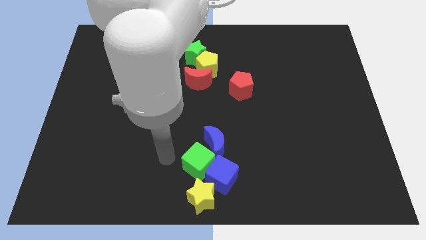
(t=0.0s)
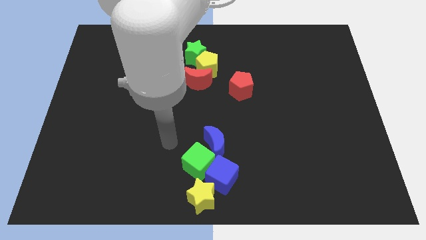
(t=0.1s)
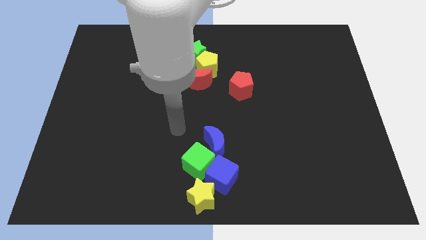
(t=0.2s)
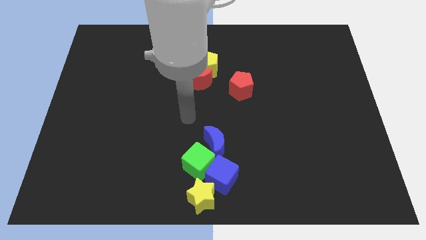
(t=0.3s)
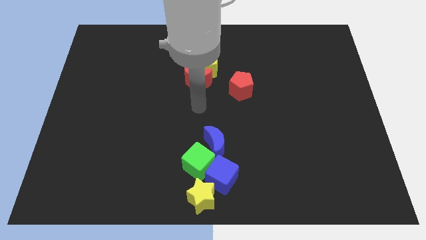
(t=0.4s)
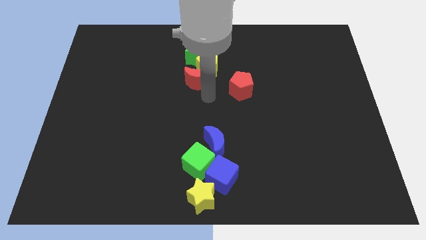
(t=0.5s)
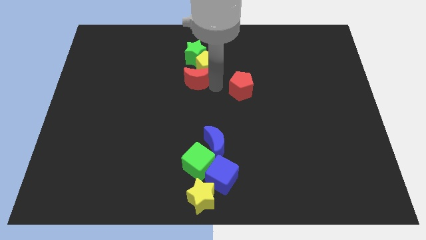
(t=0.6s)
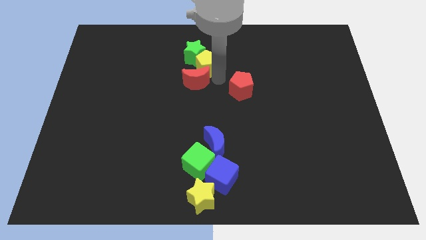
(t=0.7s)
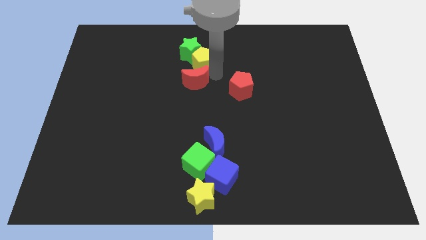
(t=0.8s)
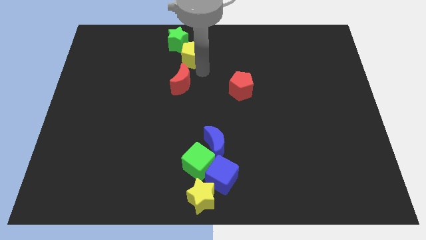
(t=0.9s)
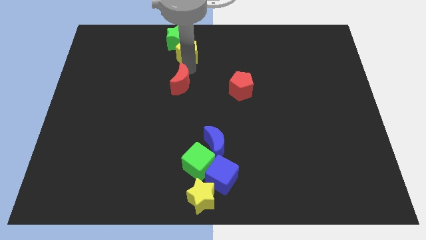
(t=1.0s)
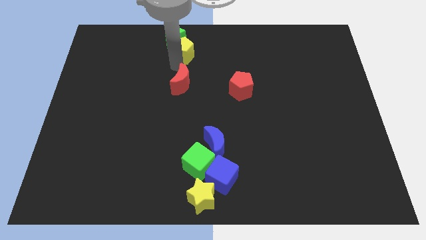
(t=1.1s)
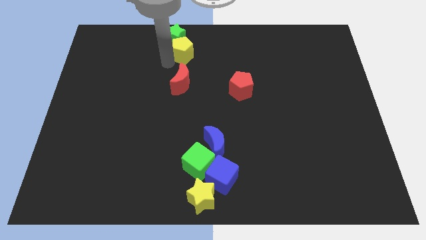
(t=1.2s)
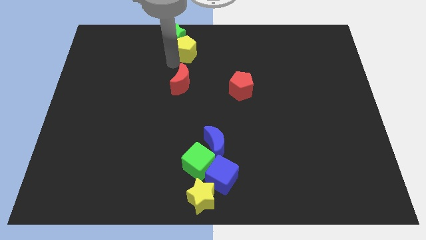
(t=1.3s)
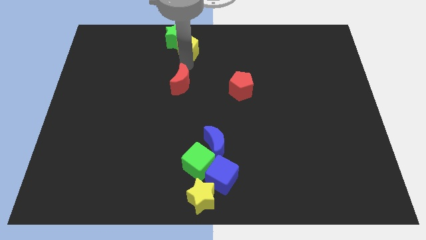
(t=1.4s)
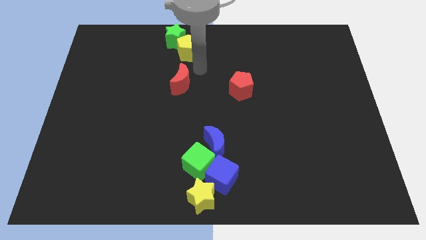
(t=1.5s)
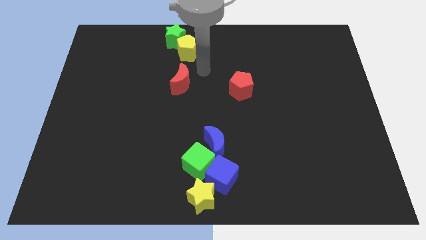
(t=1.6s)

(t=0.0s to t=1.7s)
separate yellow pentagon and green star from red crescent

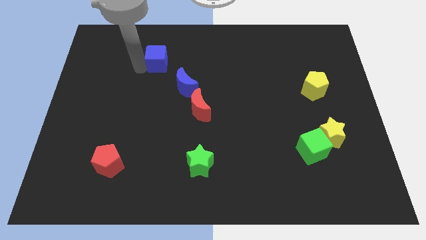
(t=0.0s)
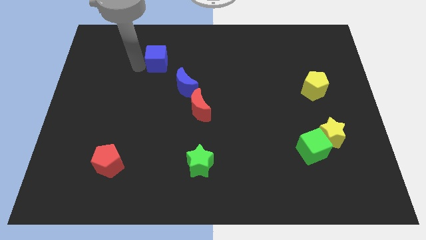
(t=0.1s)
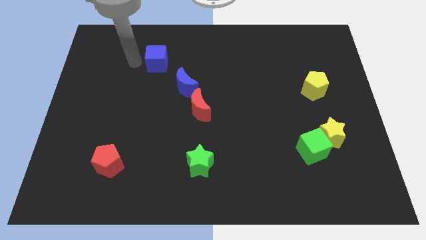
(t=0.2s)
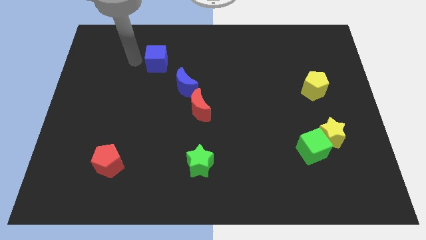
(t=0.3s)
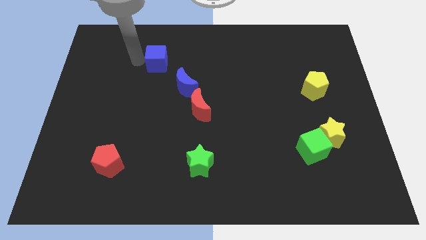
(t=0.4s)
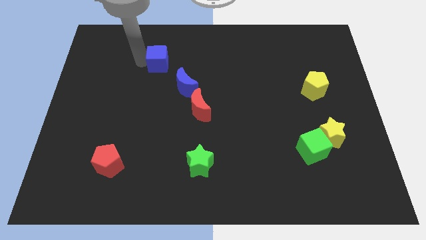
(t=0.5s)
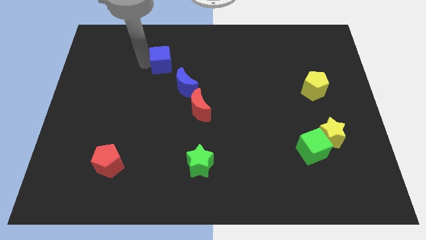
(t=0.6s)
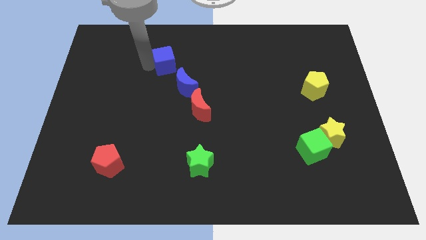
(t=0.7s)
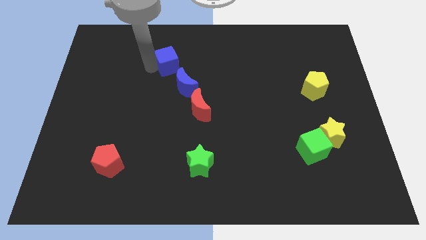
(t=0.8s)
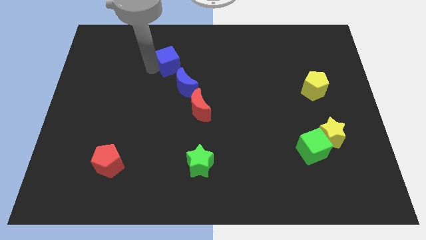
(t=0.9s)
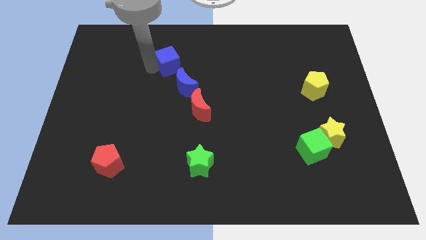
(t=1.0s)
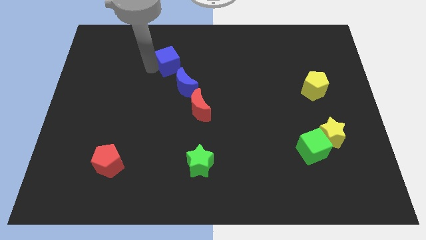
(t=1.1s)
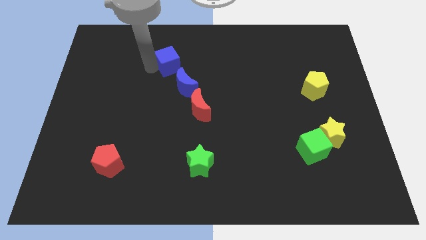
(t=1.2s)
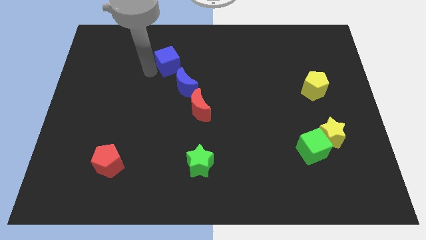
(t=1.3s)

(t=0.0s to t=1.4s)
move blue cube diagonally above blue moon

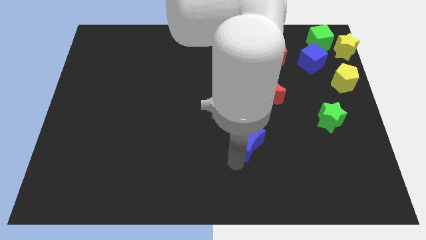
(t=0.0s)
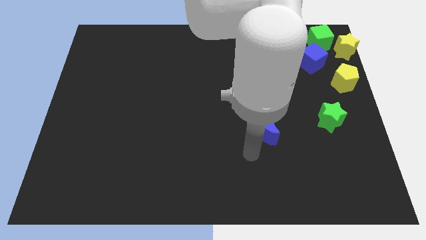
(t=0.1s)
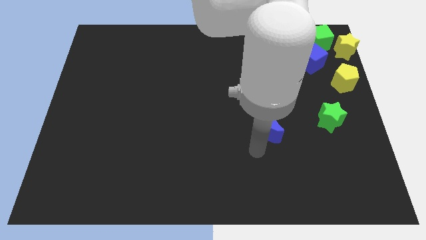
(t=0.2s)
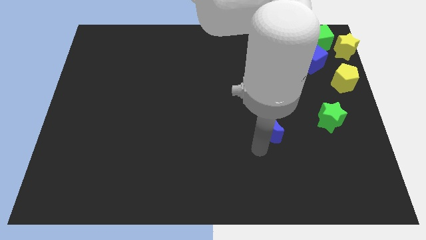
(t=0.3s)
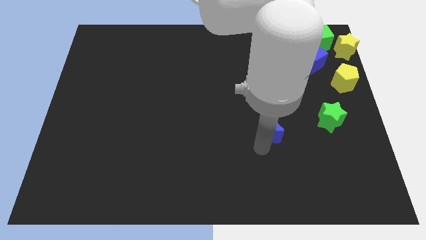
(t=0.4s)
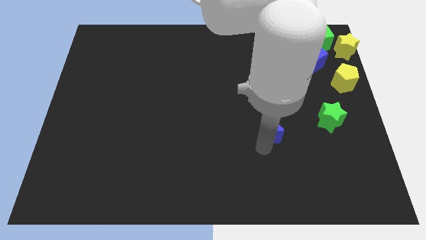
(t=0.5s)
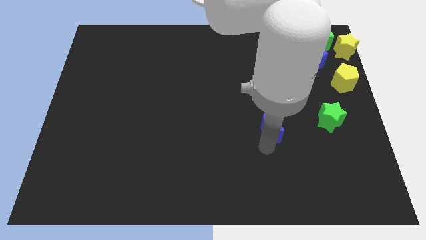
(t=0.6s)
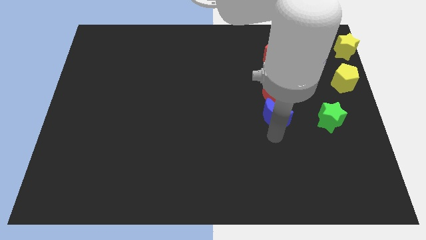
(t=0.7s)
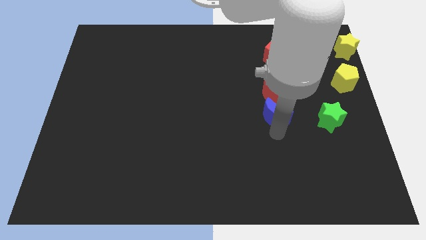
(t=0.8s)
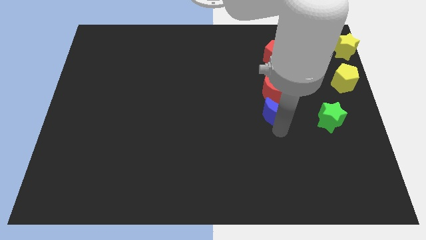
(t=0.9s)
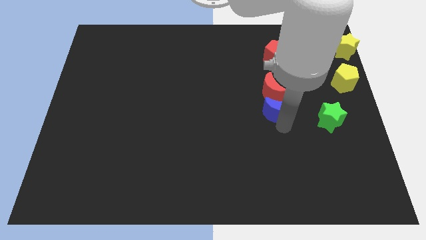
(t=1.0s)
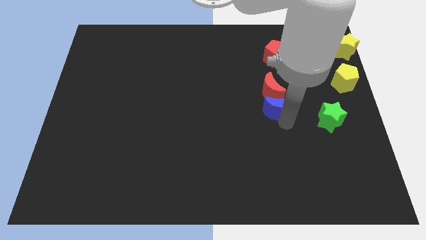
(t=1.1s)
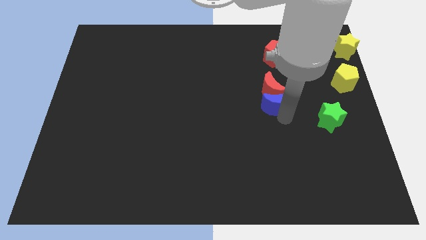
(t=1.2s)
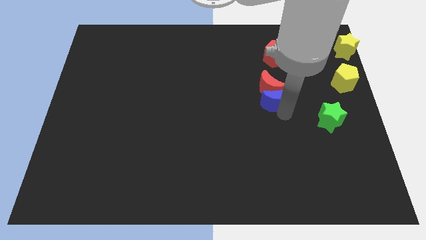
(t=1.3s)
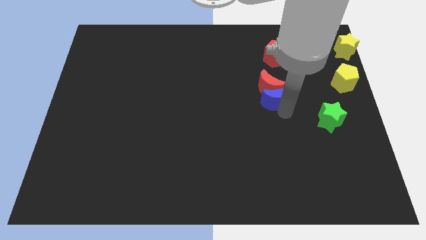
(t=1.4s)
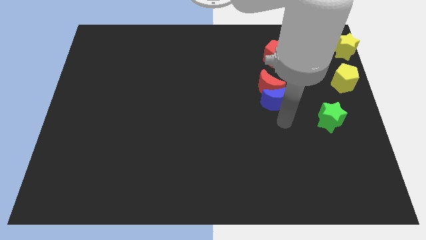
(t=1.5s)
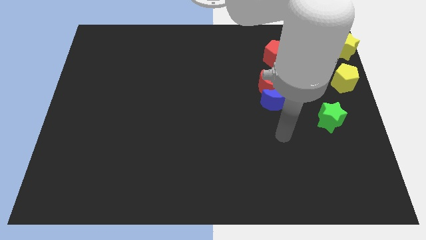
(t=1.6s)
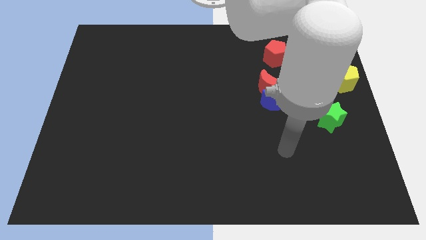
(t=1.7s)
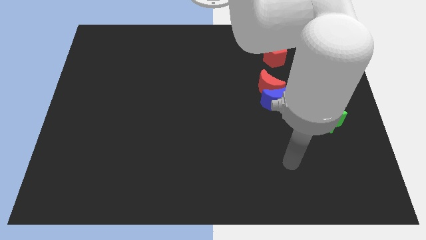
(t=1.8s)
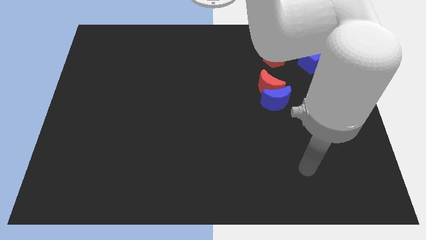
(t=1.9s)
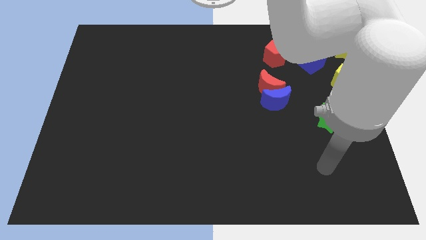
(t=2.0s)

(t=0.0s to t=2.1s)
push the red moon near the blue moon

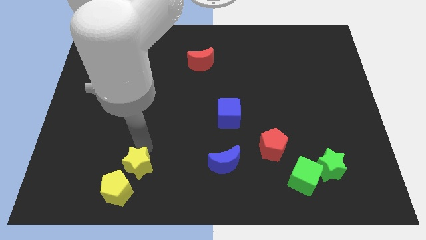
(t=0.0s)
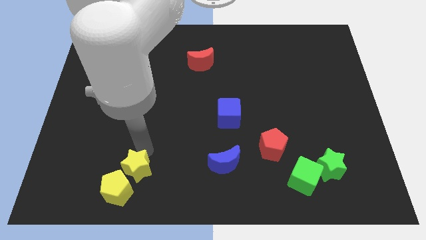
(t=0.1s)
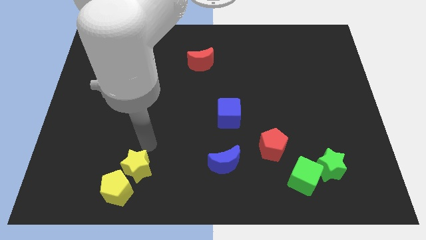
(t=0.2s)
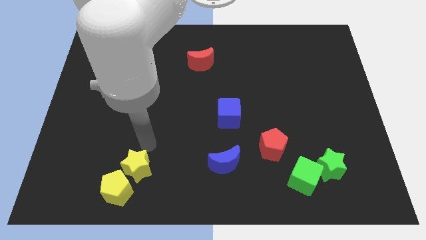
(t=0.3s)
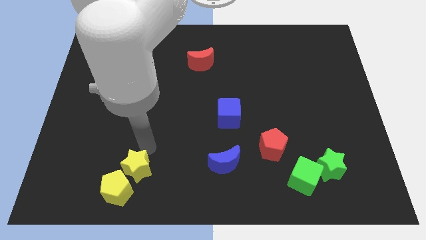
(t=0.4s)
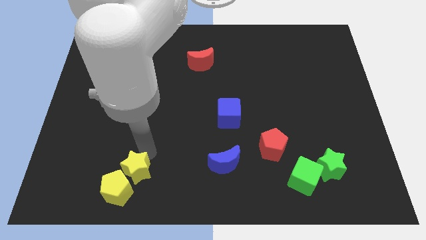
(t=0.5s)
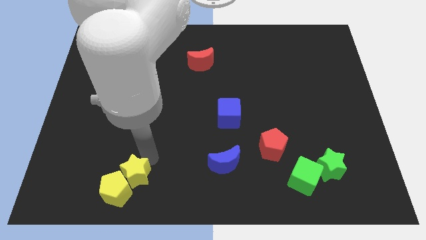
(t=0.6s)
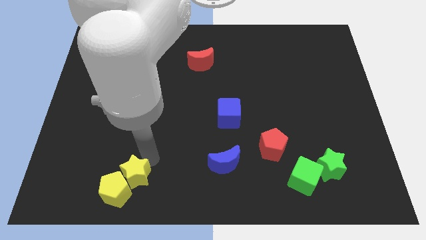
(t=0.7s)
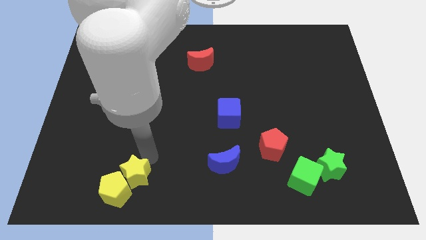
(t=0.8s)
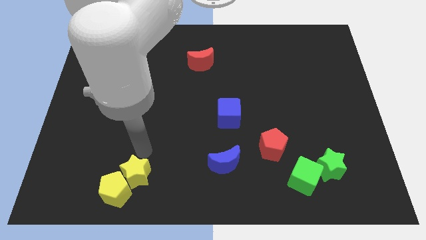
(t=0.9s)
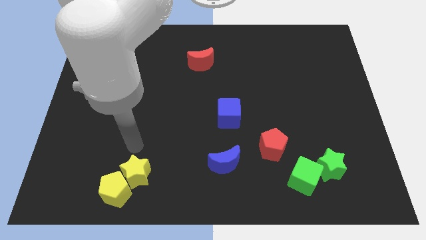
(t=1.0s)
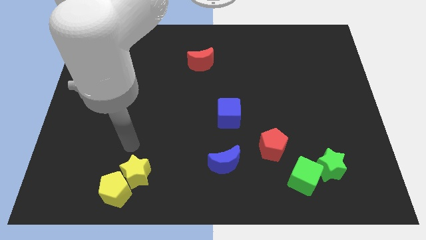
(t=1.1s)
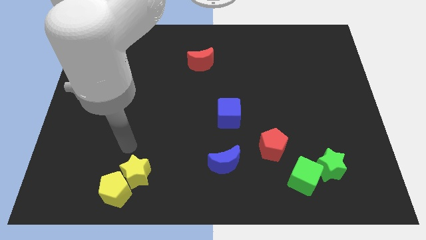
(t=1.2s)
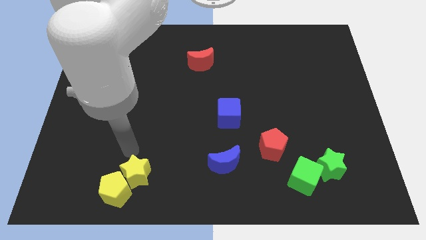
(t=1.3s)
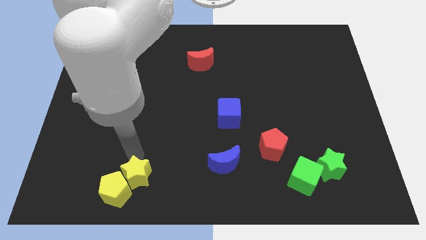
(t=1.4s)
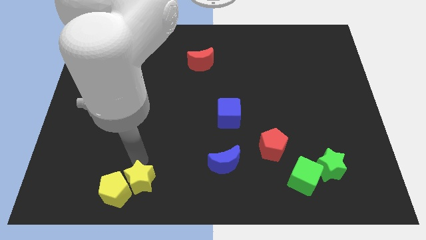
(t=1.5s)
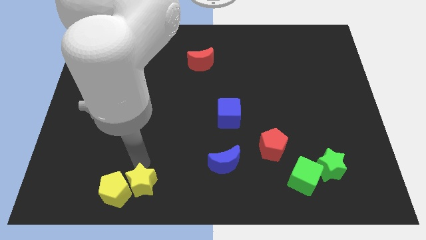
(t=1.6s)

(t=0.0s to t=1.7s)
place the yellow star closer to the yellow pentagon to form a line

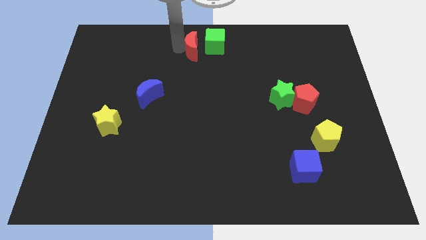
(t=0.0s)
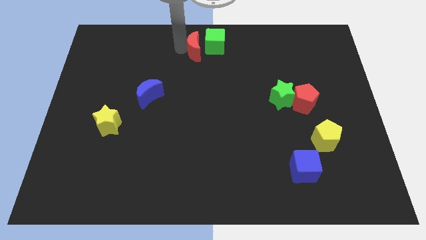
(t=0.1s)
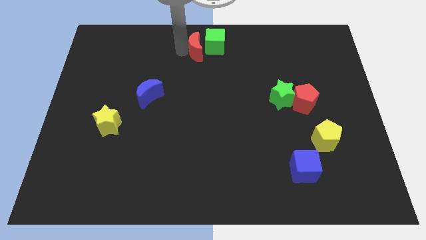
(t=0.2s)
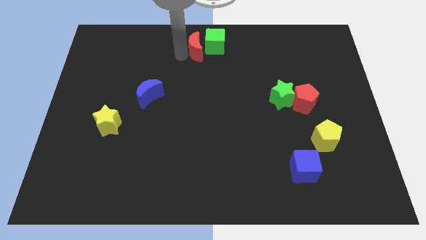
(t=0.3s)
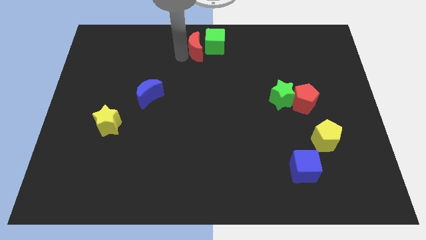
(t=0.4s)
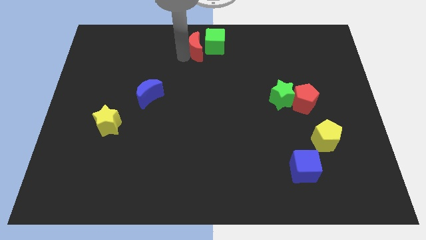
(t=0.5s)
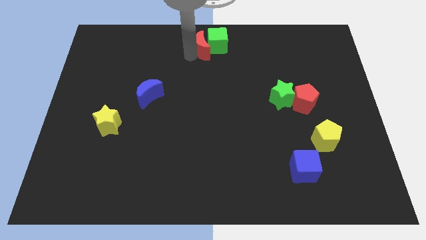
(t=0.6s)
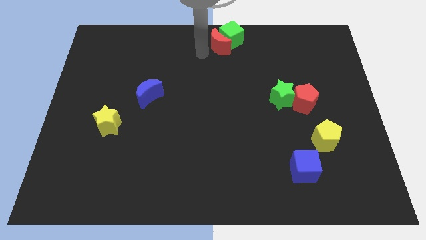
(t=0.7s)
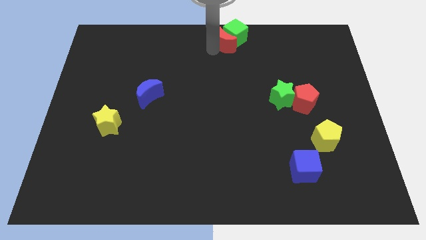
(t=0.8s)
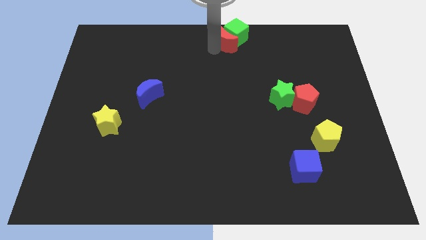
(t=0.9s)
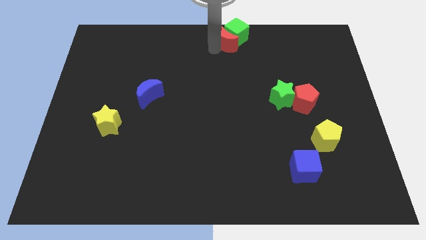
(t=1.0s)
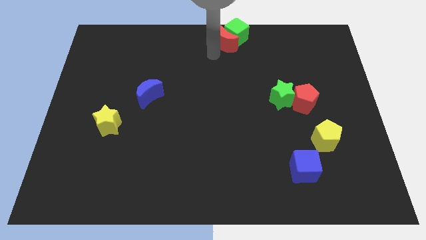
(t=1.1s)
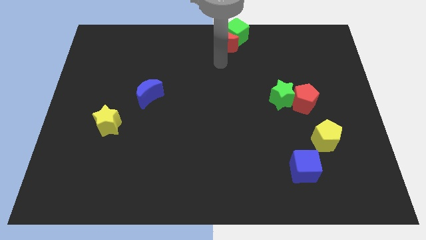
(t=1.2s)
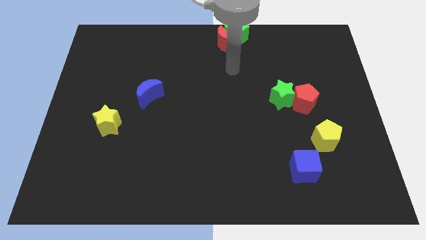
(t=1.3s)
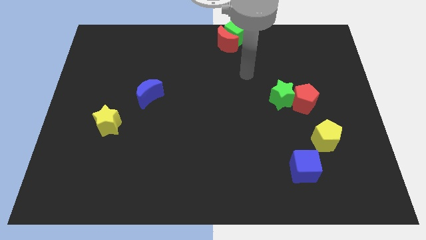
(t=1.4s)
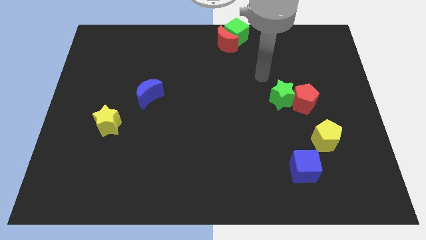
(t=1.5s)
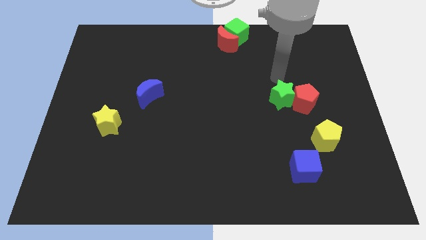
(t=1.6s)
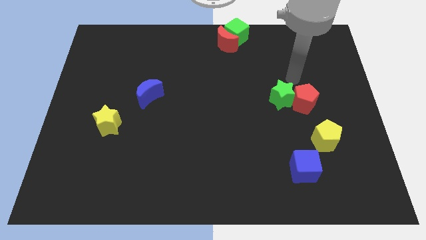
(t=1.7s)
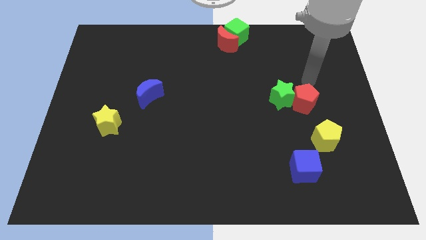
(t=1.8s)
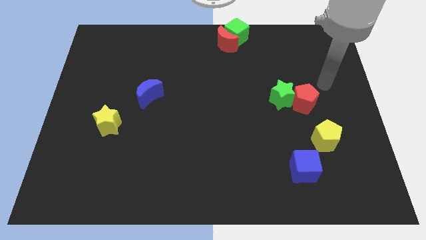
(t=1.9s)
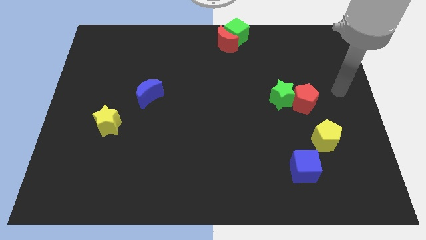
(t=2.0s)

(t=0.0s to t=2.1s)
slide the red moon and green cube to the top center of the board
